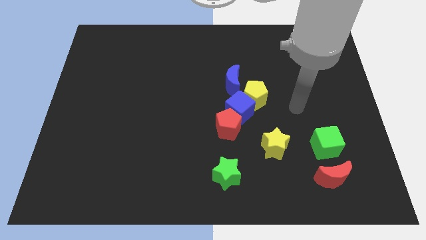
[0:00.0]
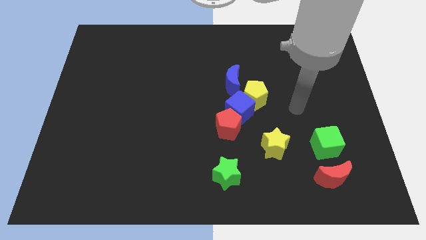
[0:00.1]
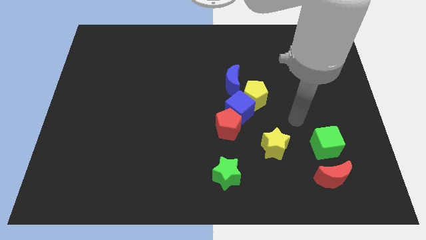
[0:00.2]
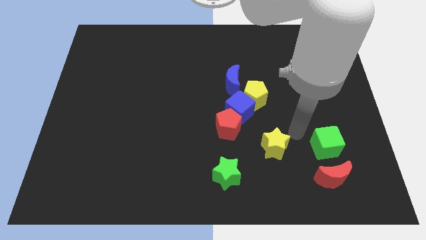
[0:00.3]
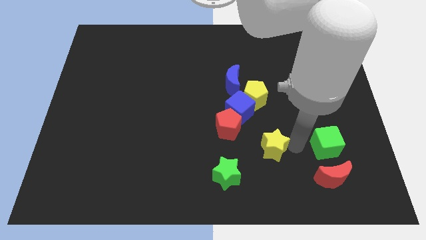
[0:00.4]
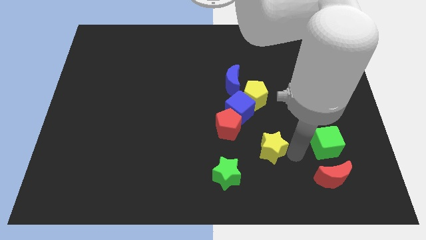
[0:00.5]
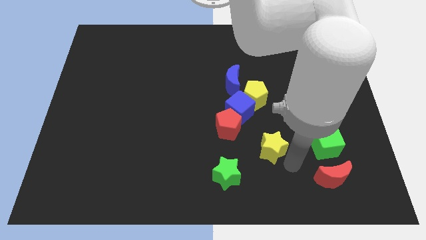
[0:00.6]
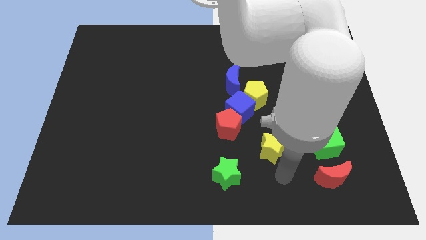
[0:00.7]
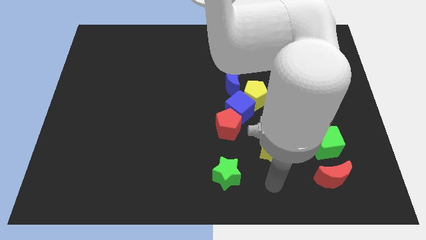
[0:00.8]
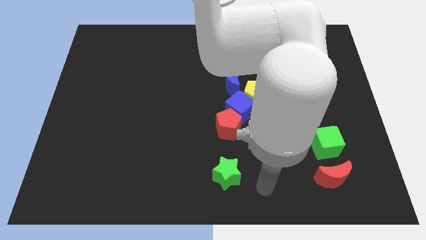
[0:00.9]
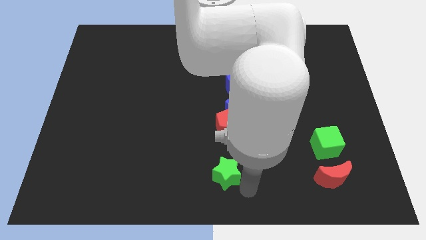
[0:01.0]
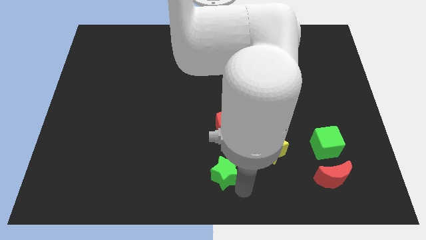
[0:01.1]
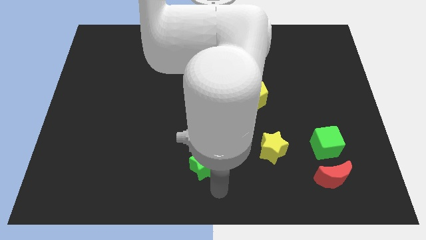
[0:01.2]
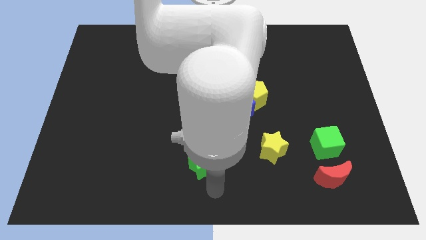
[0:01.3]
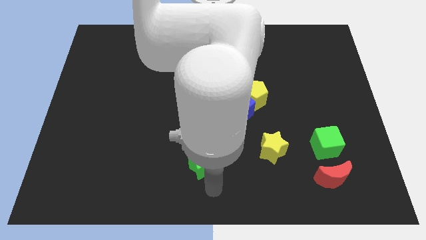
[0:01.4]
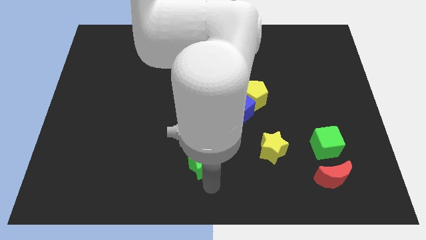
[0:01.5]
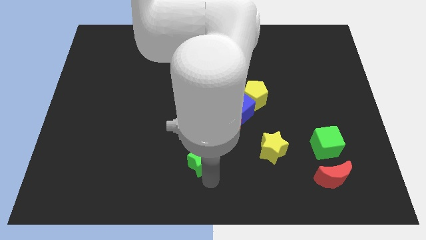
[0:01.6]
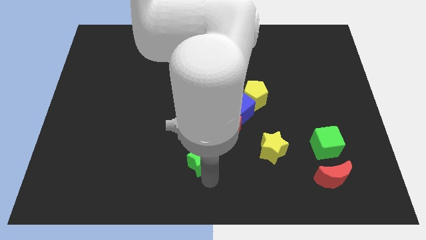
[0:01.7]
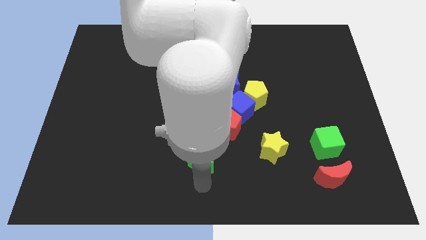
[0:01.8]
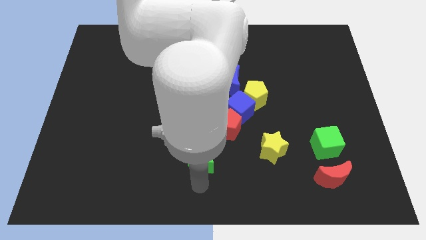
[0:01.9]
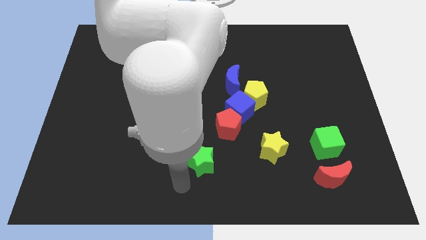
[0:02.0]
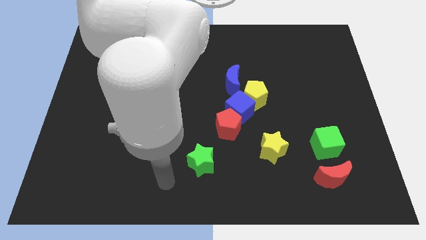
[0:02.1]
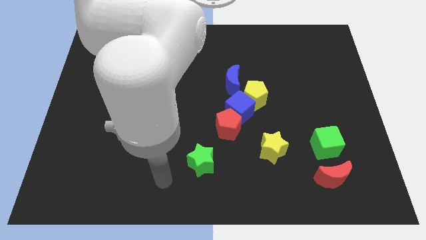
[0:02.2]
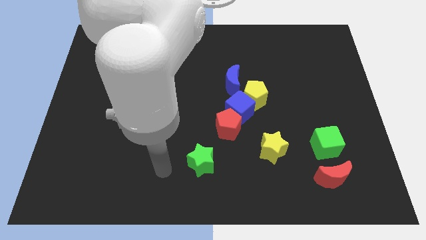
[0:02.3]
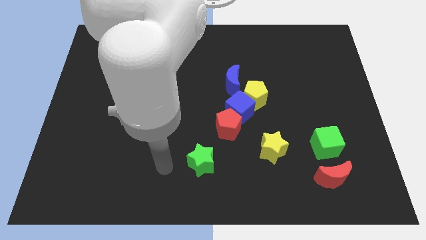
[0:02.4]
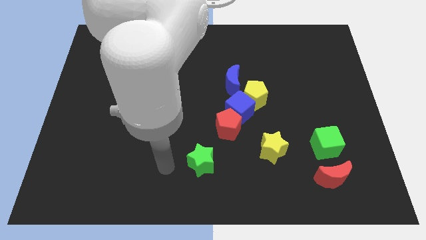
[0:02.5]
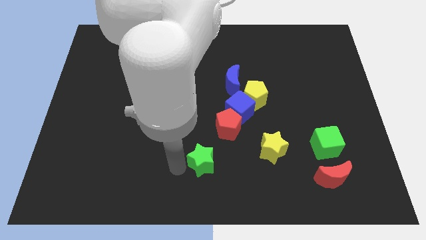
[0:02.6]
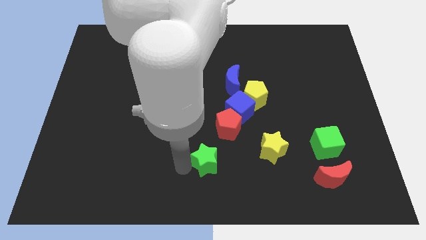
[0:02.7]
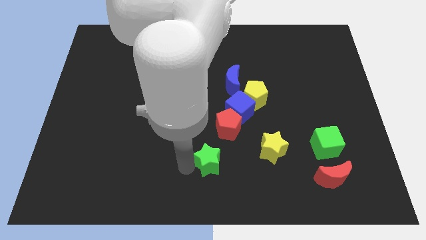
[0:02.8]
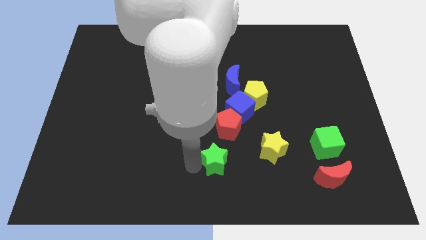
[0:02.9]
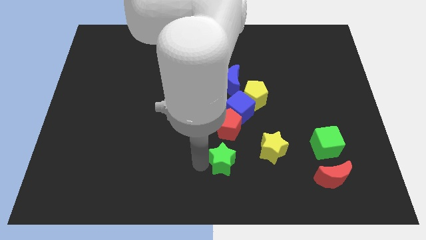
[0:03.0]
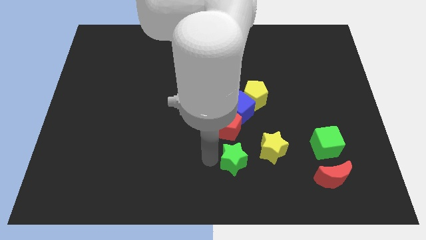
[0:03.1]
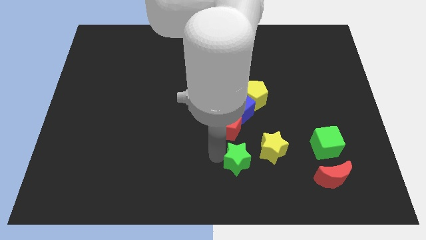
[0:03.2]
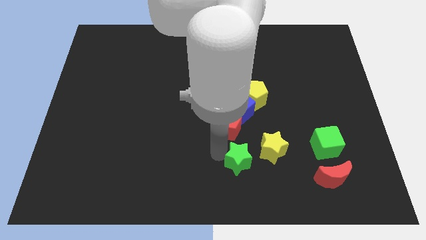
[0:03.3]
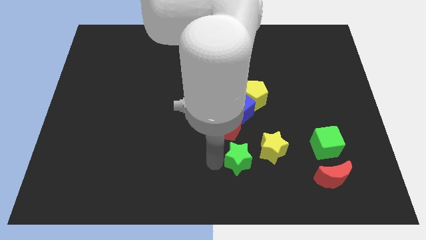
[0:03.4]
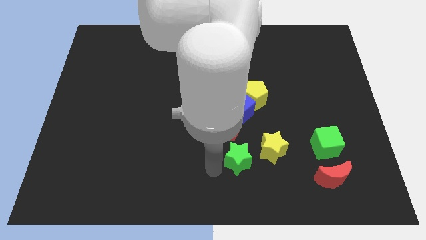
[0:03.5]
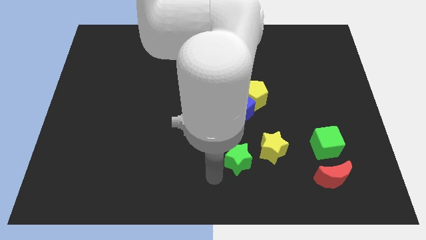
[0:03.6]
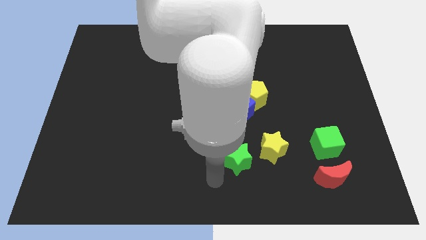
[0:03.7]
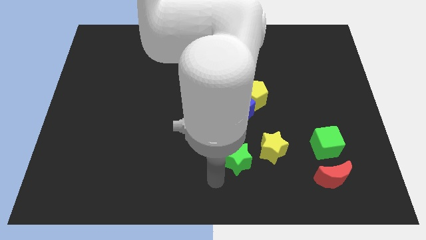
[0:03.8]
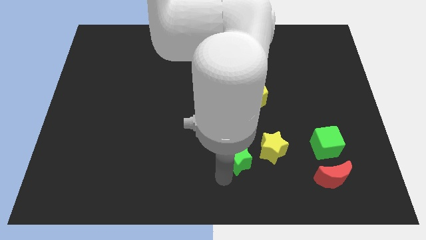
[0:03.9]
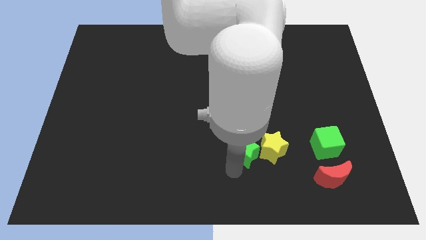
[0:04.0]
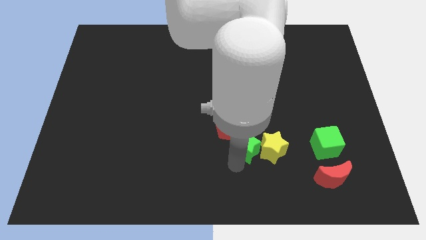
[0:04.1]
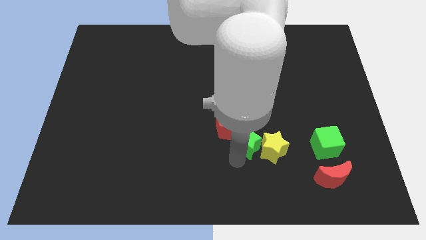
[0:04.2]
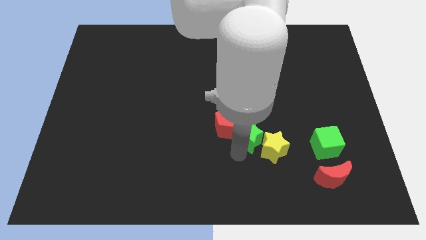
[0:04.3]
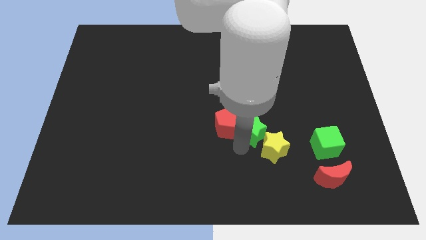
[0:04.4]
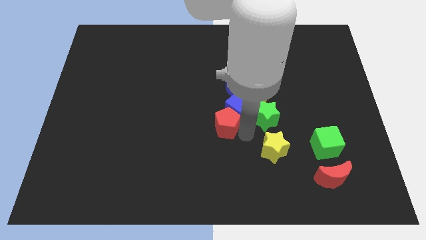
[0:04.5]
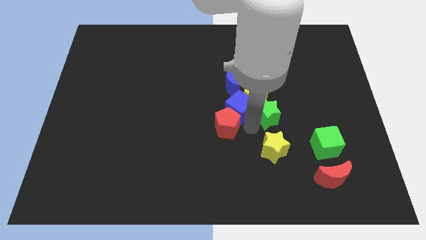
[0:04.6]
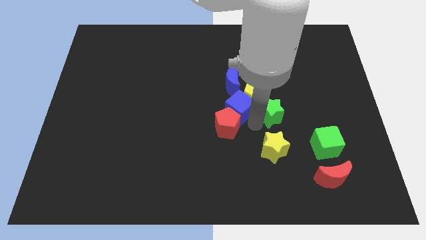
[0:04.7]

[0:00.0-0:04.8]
slide the green star towards the yellow pentagon

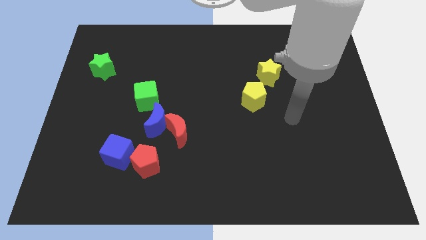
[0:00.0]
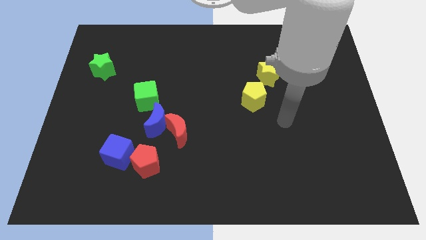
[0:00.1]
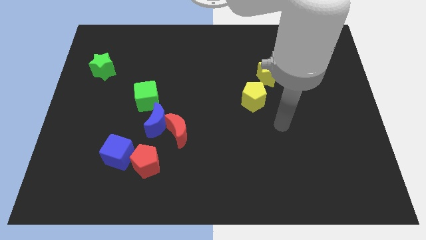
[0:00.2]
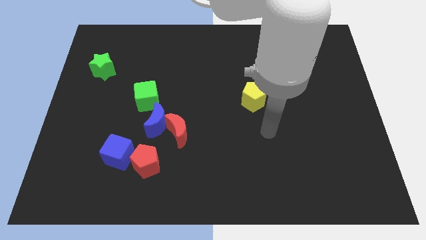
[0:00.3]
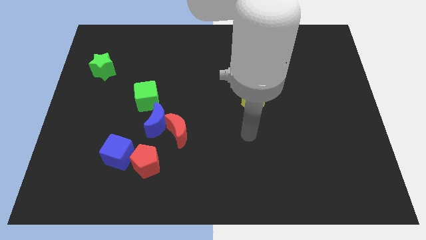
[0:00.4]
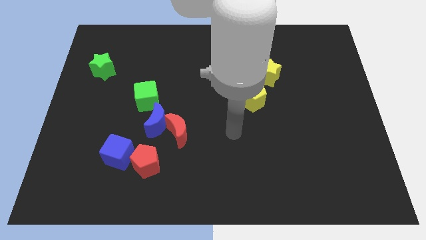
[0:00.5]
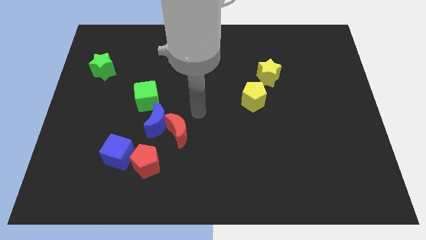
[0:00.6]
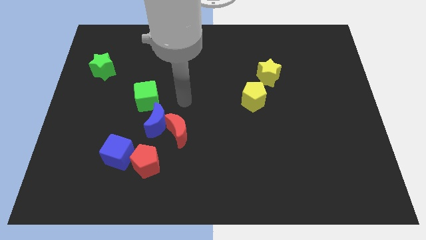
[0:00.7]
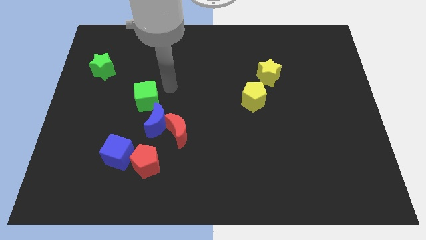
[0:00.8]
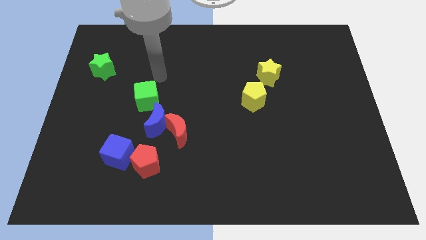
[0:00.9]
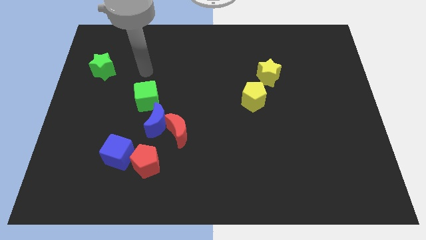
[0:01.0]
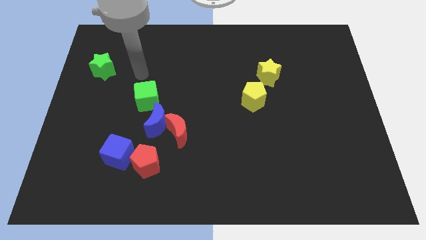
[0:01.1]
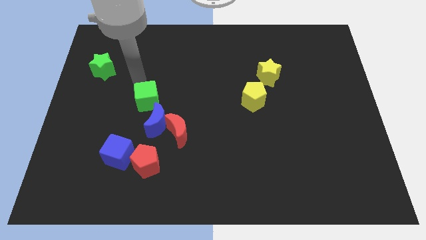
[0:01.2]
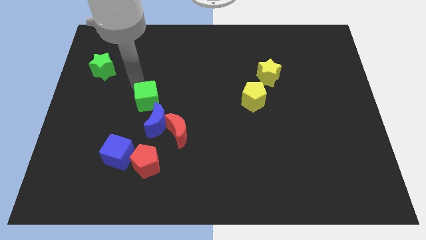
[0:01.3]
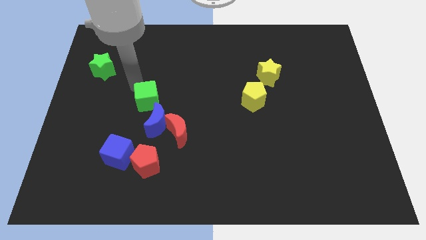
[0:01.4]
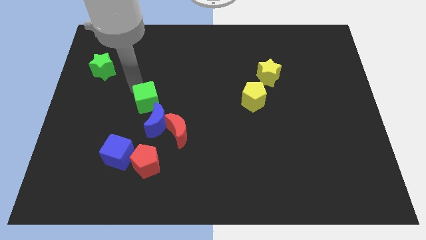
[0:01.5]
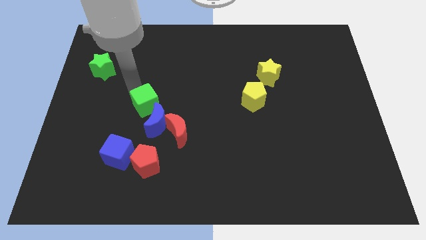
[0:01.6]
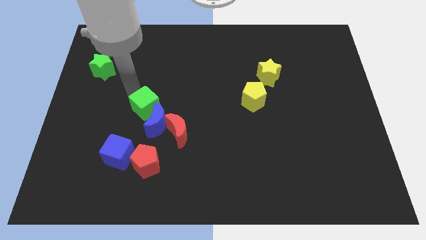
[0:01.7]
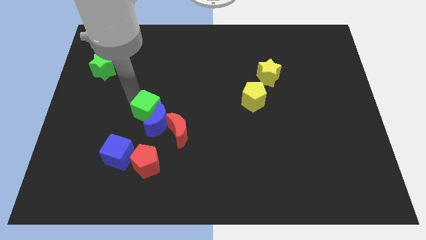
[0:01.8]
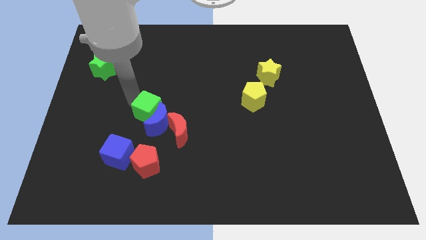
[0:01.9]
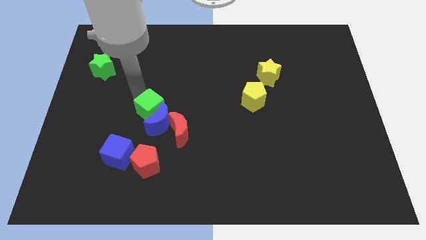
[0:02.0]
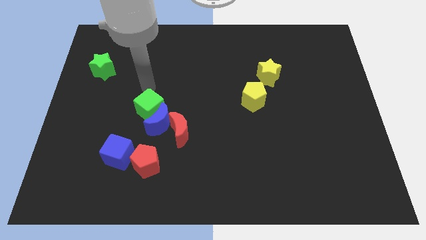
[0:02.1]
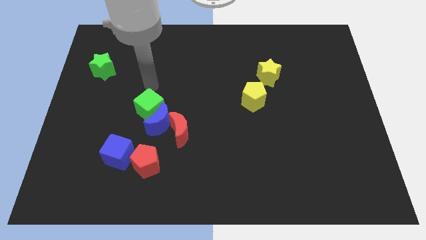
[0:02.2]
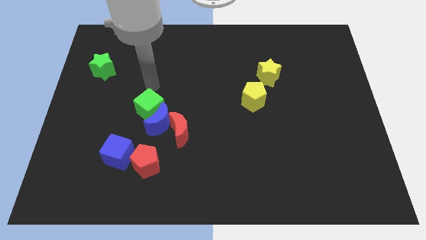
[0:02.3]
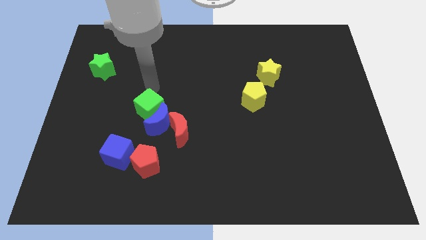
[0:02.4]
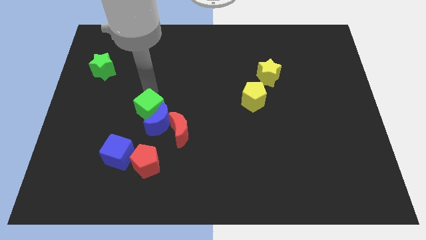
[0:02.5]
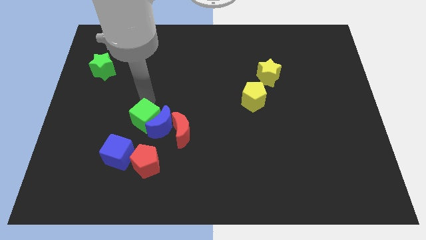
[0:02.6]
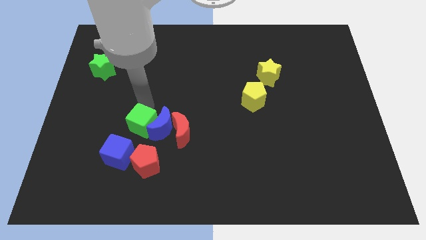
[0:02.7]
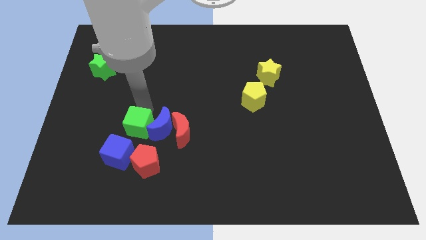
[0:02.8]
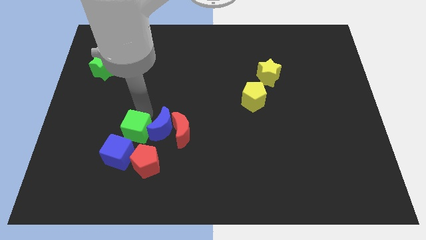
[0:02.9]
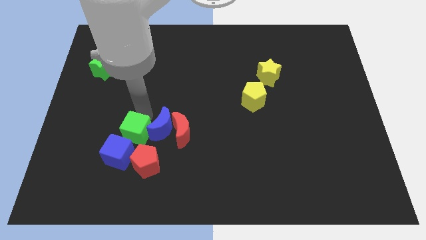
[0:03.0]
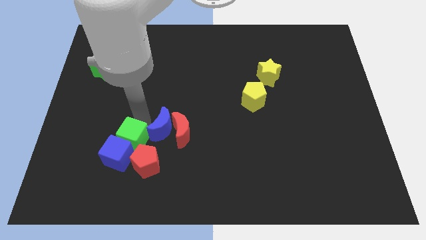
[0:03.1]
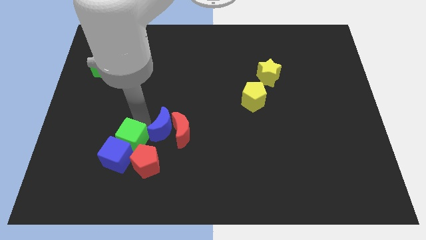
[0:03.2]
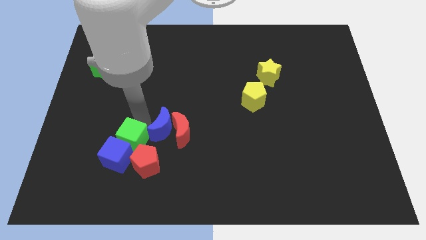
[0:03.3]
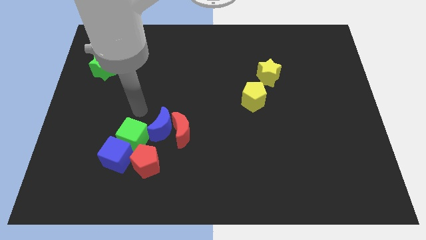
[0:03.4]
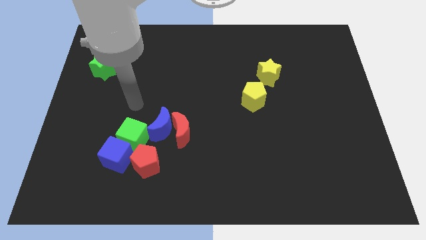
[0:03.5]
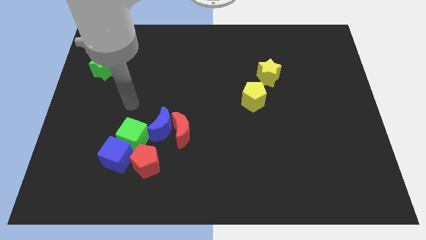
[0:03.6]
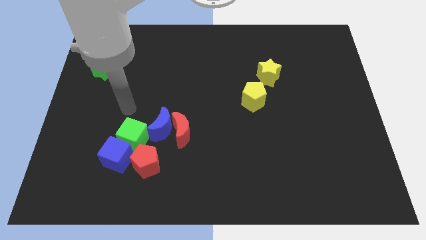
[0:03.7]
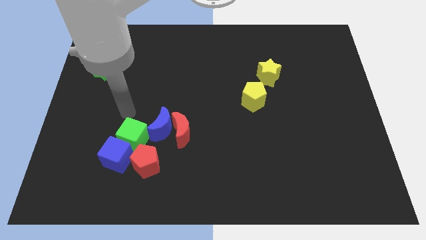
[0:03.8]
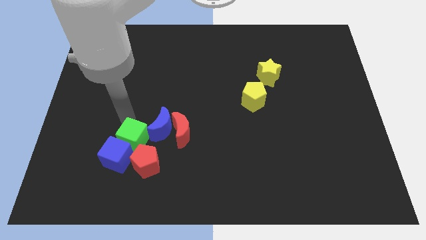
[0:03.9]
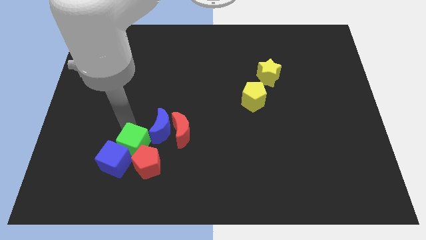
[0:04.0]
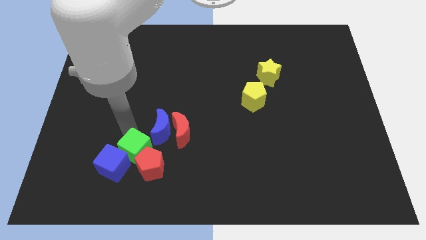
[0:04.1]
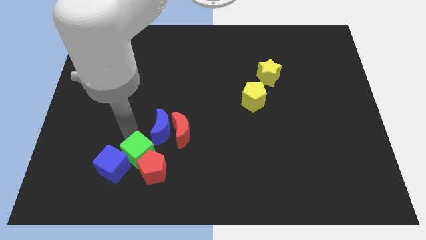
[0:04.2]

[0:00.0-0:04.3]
move the green cube next to the red pentagon
